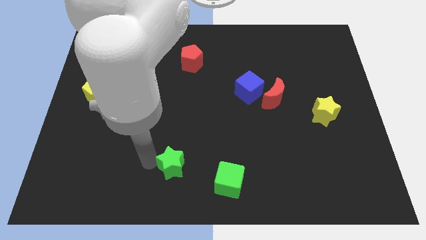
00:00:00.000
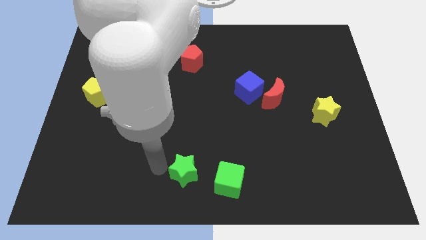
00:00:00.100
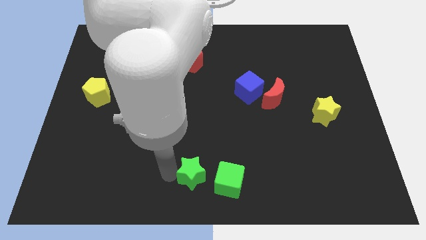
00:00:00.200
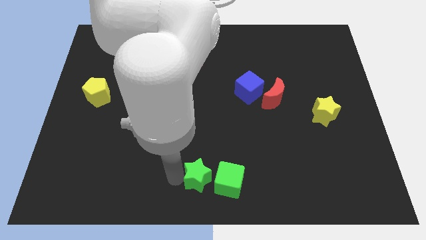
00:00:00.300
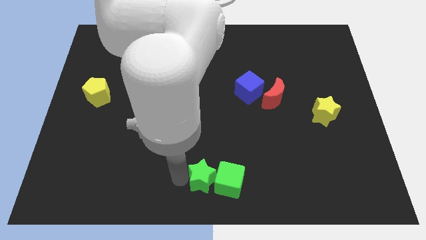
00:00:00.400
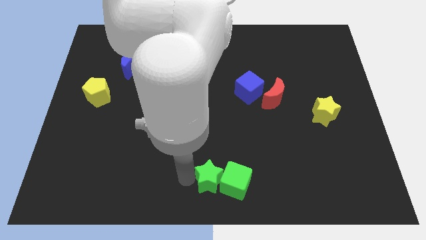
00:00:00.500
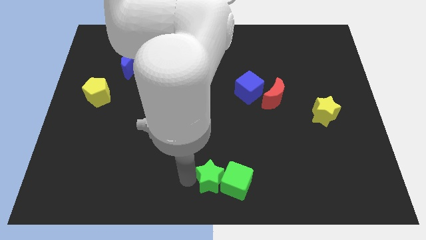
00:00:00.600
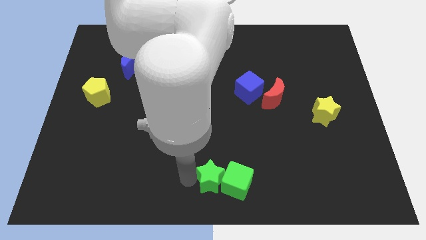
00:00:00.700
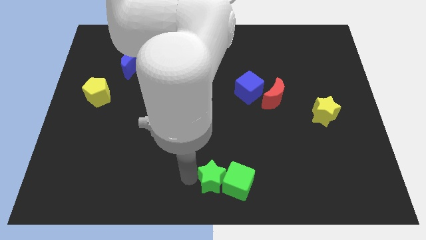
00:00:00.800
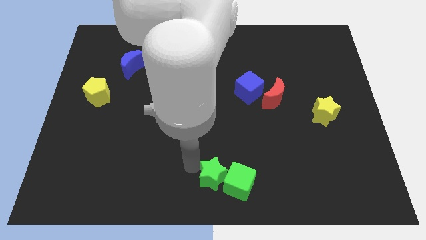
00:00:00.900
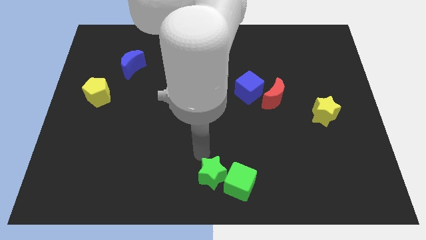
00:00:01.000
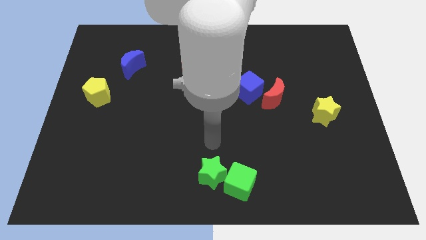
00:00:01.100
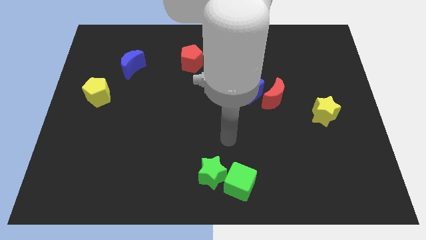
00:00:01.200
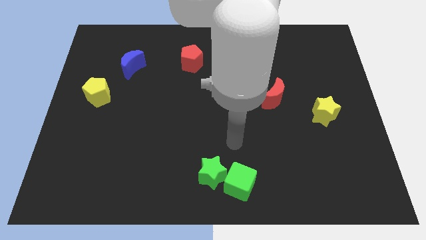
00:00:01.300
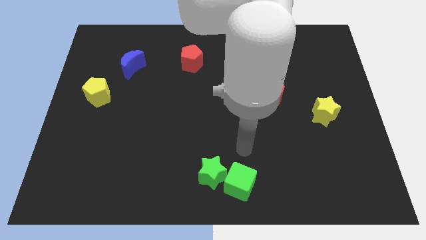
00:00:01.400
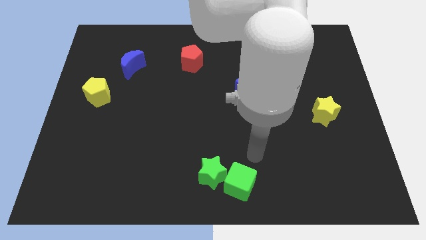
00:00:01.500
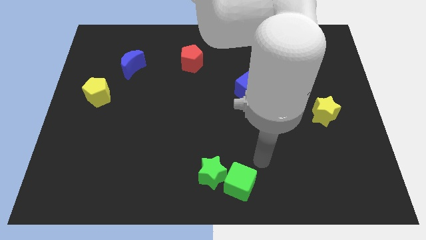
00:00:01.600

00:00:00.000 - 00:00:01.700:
push the green star into green cube

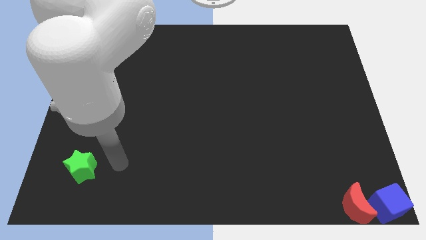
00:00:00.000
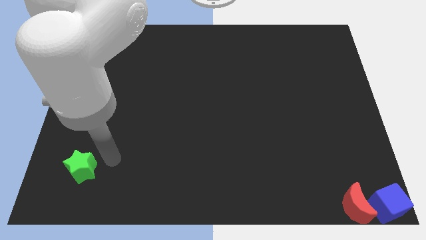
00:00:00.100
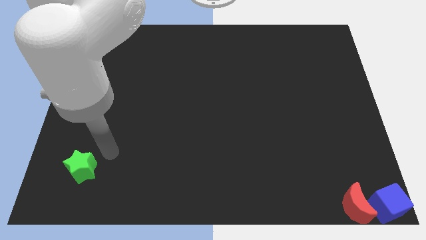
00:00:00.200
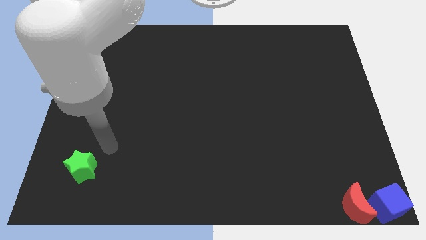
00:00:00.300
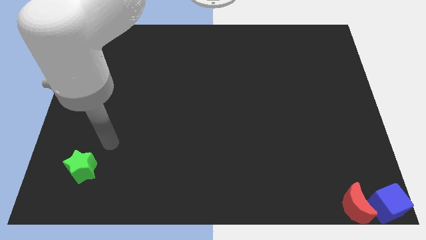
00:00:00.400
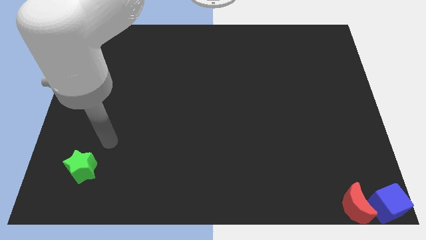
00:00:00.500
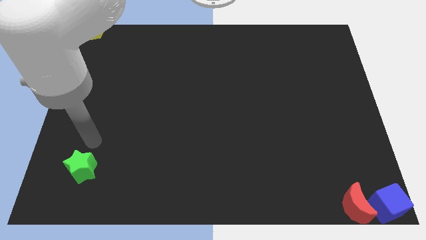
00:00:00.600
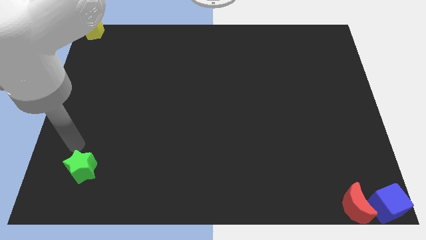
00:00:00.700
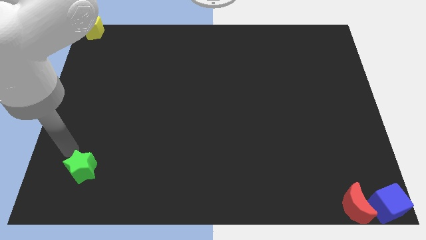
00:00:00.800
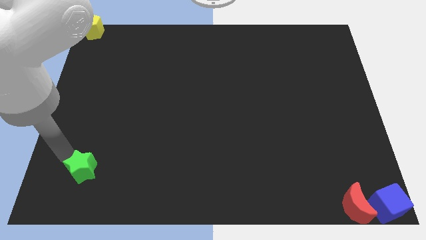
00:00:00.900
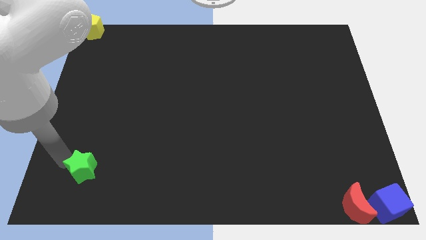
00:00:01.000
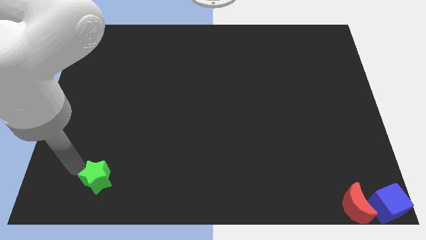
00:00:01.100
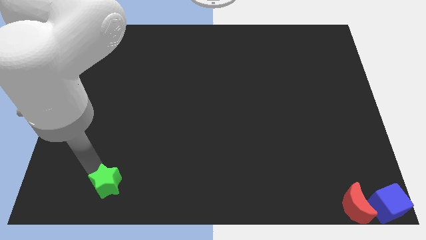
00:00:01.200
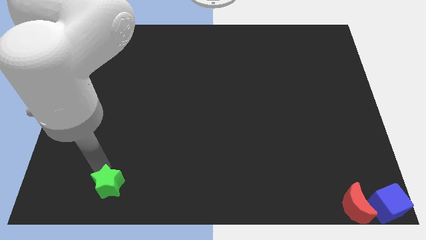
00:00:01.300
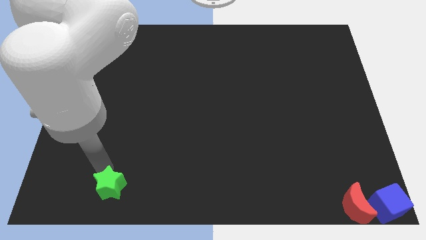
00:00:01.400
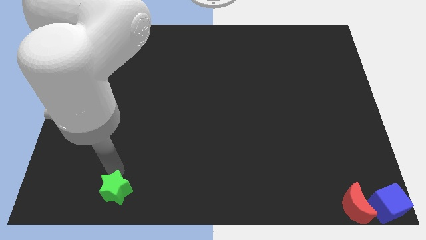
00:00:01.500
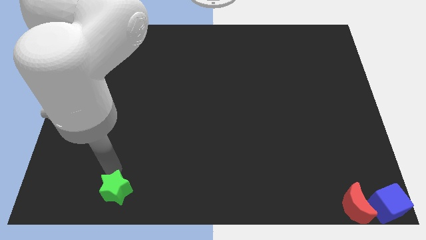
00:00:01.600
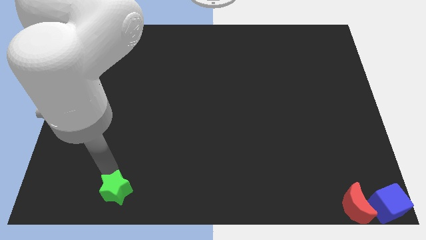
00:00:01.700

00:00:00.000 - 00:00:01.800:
slide the green star to the bottom side of the table

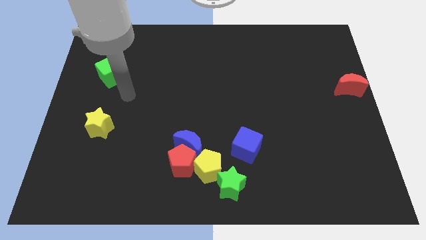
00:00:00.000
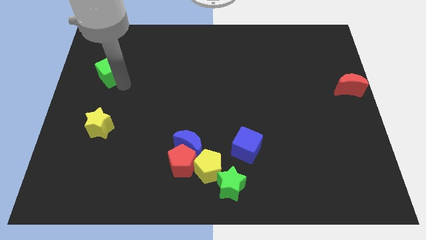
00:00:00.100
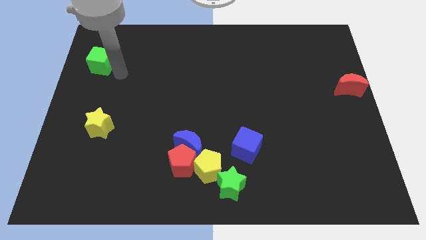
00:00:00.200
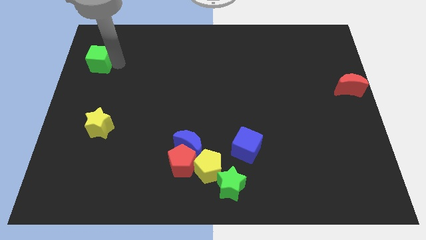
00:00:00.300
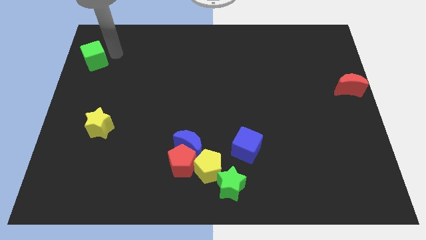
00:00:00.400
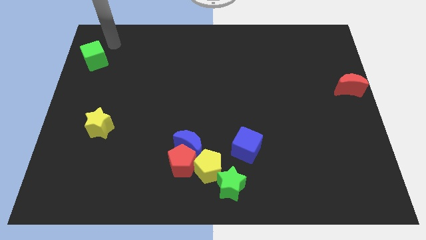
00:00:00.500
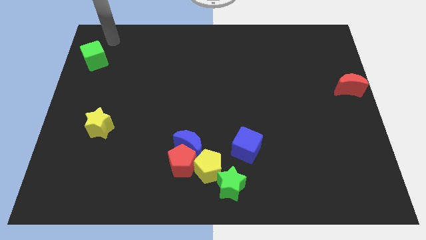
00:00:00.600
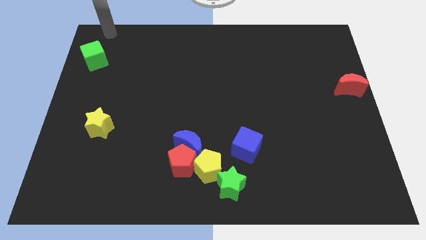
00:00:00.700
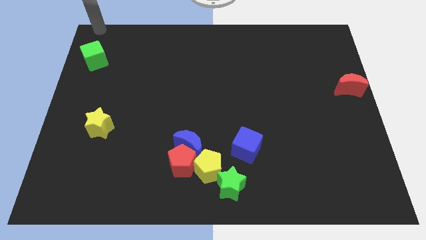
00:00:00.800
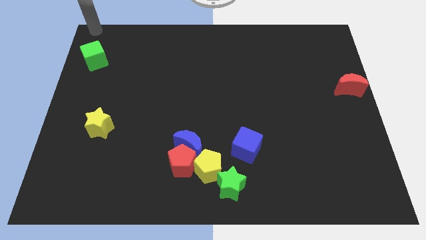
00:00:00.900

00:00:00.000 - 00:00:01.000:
move the green cube to the top left of the board

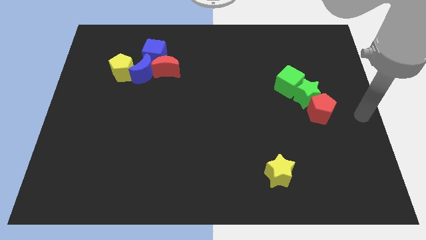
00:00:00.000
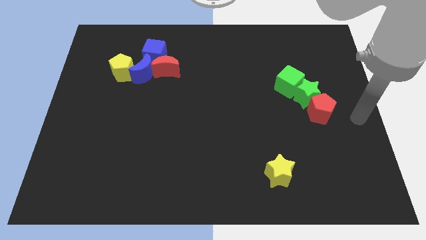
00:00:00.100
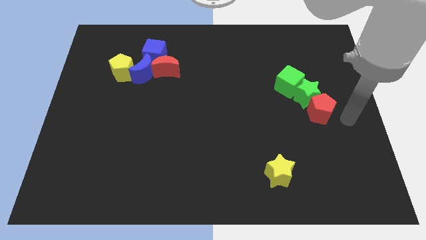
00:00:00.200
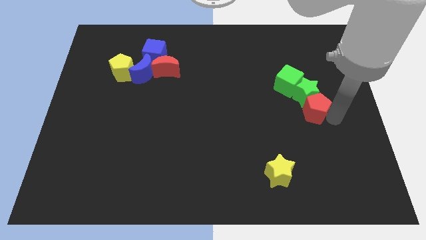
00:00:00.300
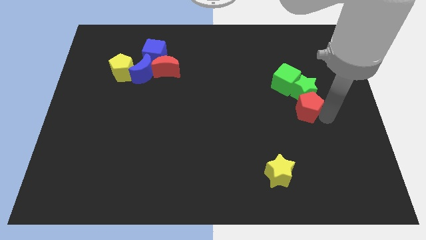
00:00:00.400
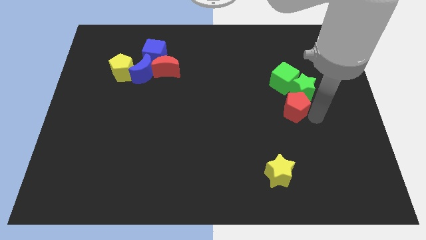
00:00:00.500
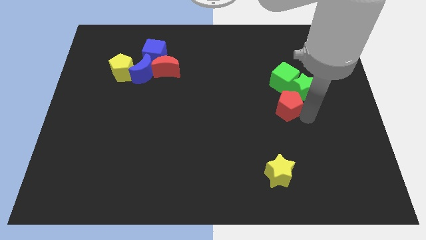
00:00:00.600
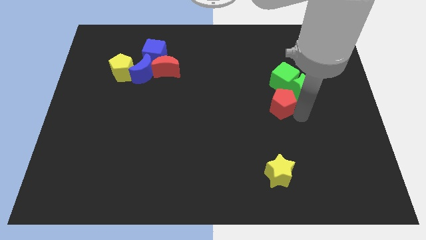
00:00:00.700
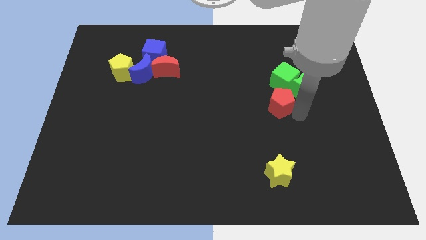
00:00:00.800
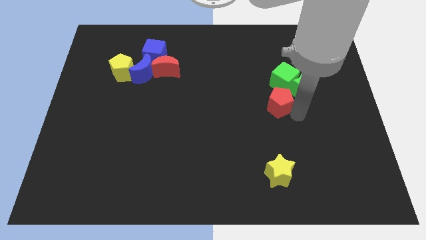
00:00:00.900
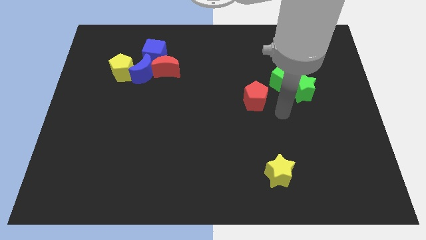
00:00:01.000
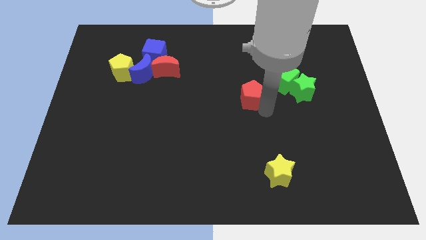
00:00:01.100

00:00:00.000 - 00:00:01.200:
separate the red pentagon from the green star

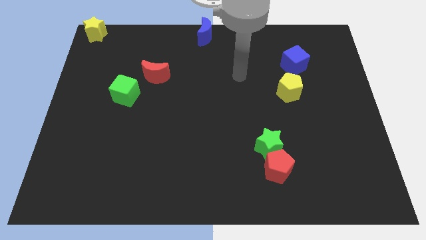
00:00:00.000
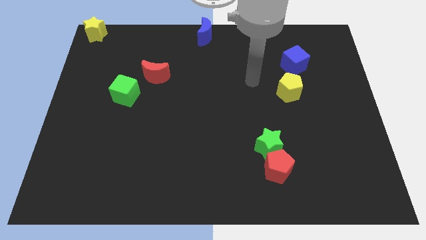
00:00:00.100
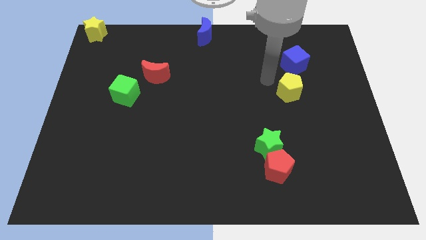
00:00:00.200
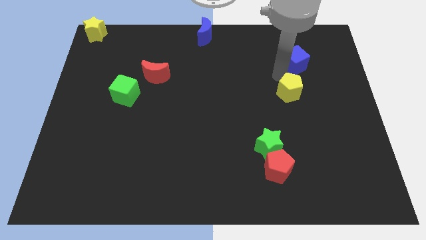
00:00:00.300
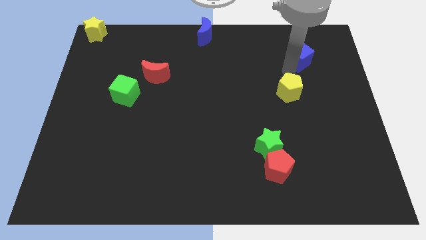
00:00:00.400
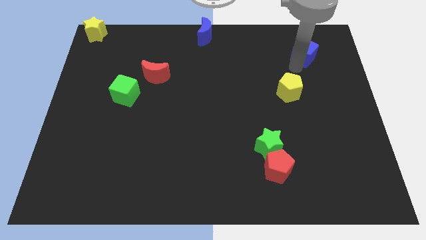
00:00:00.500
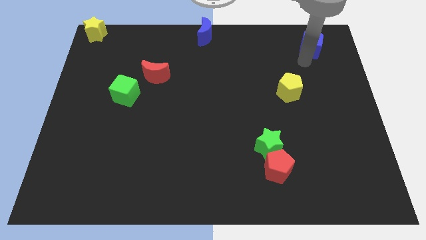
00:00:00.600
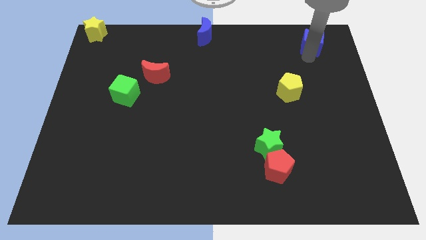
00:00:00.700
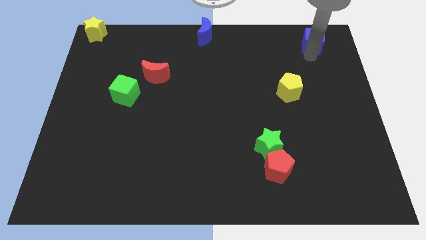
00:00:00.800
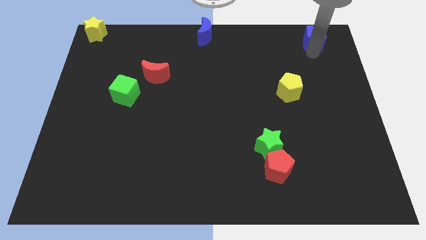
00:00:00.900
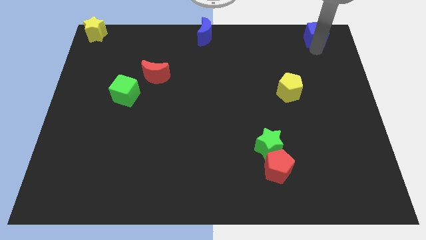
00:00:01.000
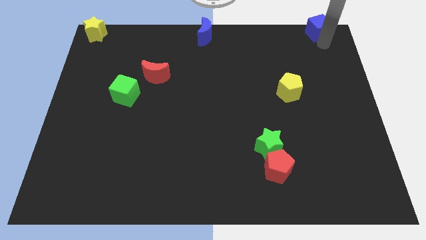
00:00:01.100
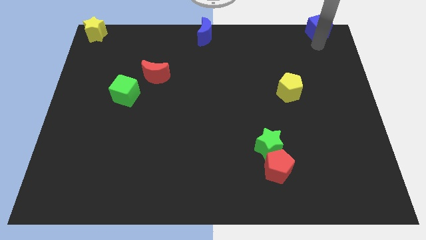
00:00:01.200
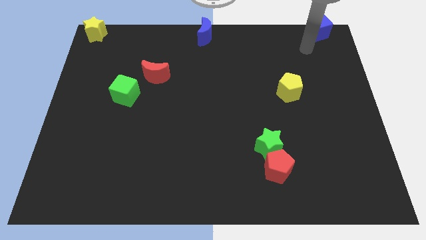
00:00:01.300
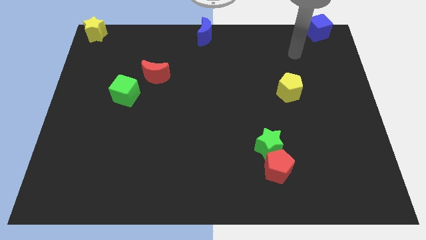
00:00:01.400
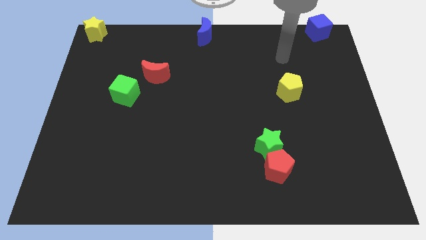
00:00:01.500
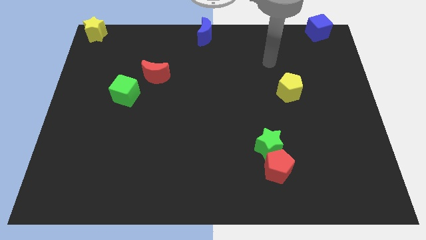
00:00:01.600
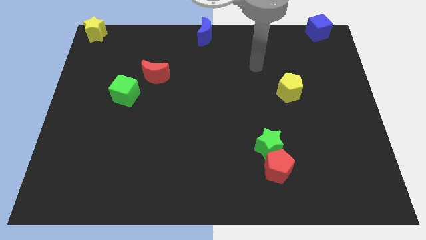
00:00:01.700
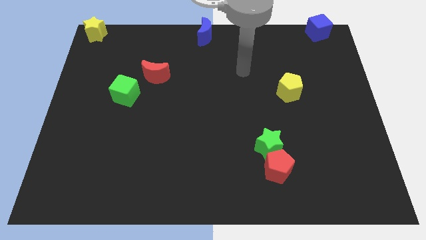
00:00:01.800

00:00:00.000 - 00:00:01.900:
push the blue cube to the top right of the board

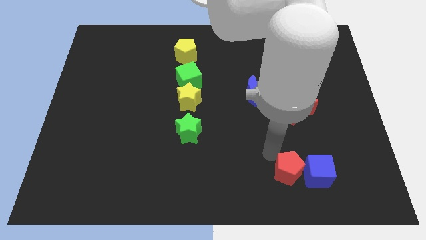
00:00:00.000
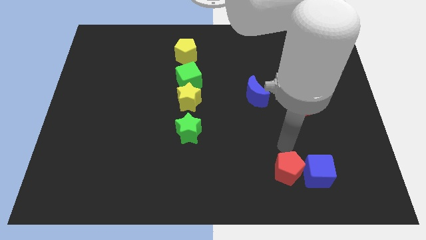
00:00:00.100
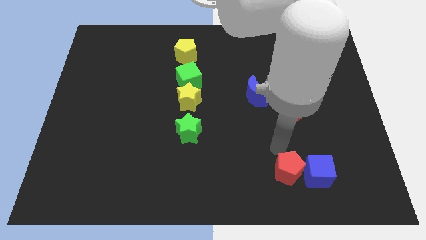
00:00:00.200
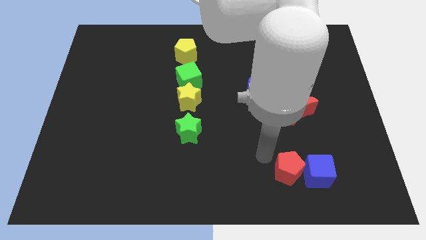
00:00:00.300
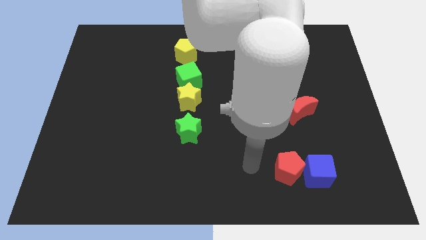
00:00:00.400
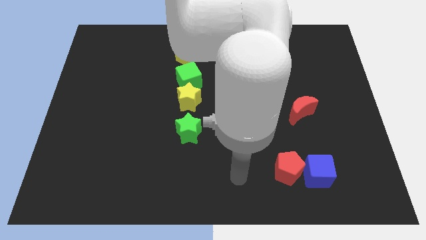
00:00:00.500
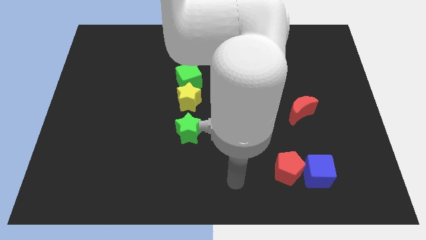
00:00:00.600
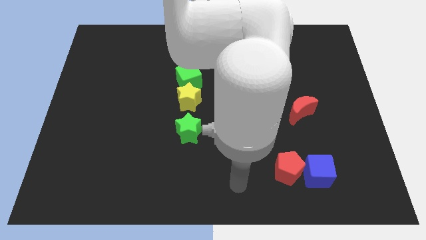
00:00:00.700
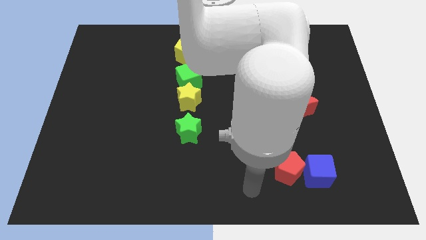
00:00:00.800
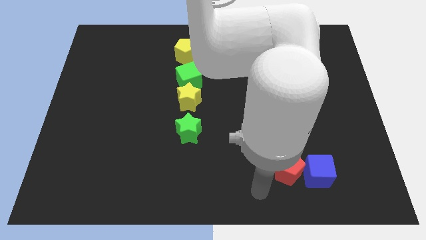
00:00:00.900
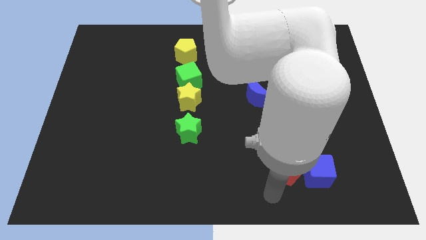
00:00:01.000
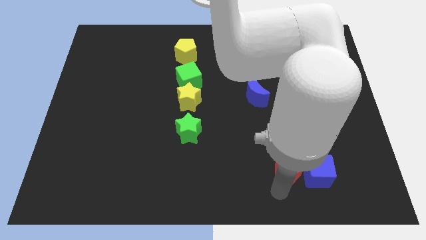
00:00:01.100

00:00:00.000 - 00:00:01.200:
place your arm at the bottom left side of red pentagon

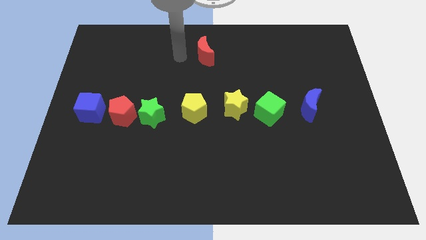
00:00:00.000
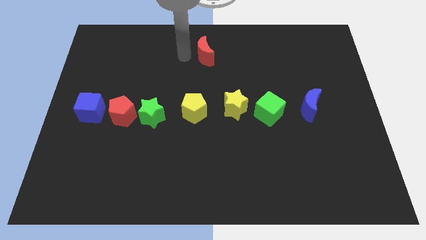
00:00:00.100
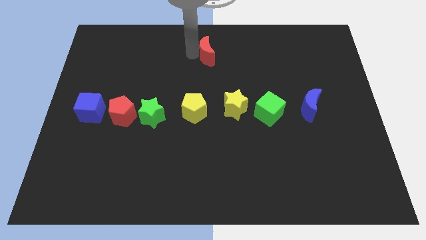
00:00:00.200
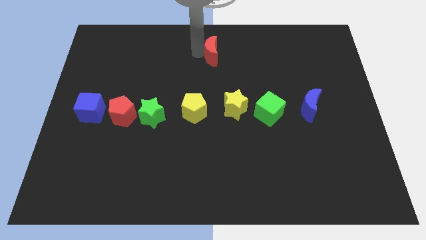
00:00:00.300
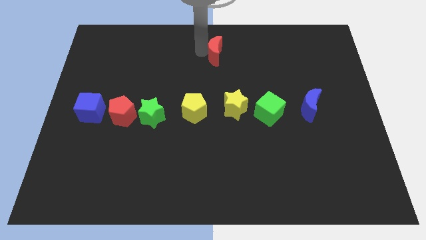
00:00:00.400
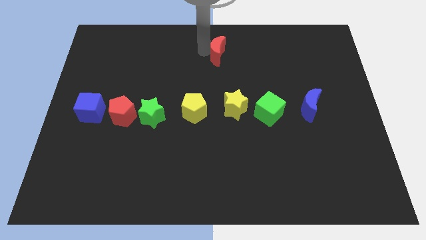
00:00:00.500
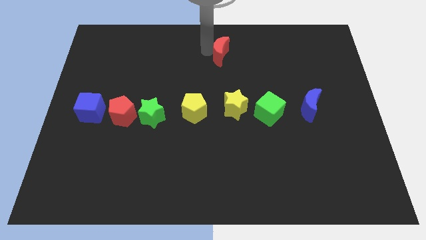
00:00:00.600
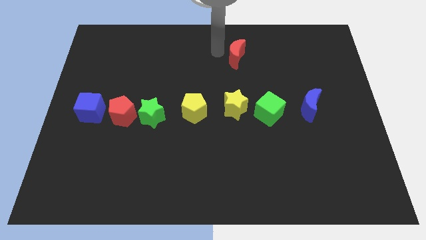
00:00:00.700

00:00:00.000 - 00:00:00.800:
move the red crescent to the right
